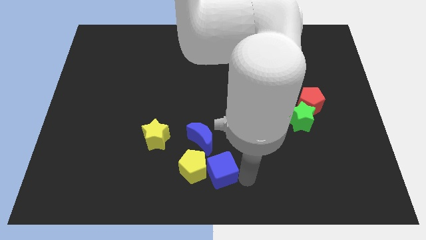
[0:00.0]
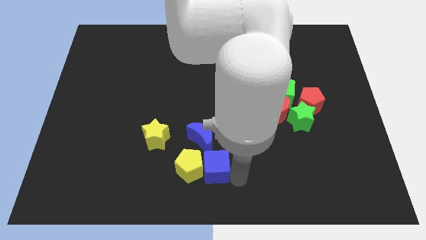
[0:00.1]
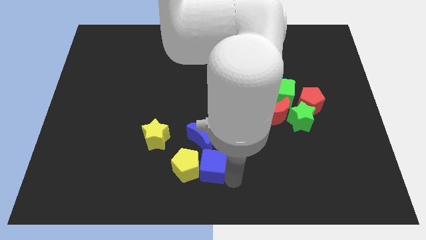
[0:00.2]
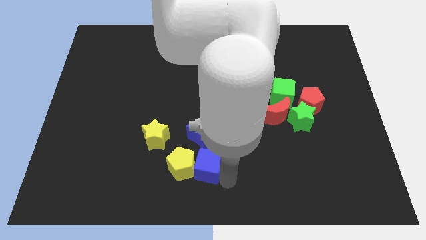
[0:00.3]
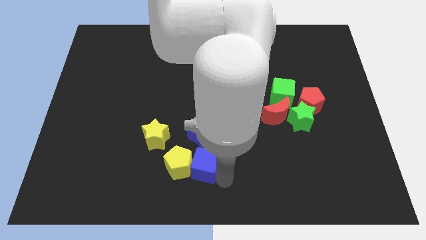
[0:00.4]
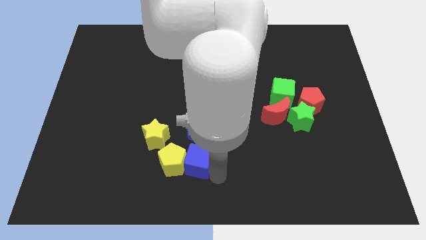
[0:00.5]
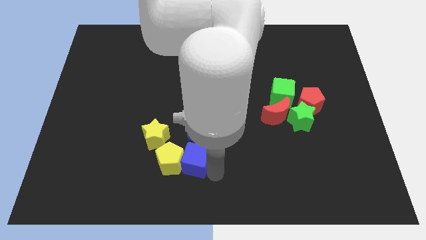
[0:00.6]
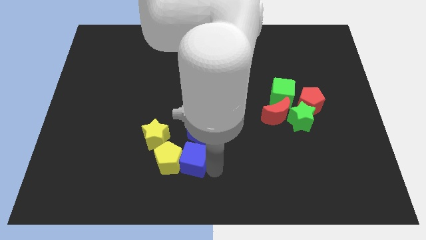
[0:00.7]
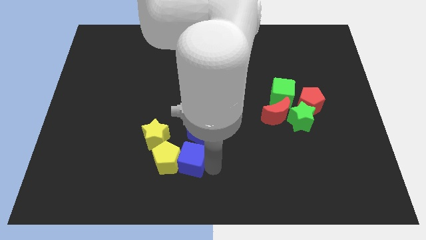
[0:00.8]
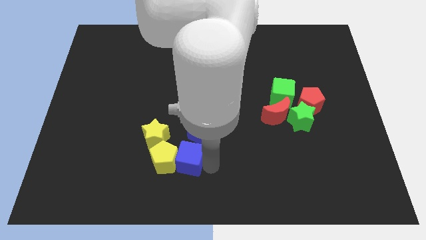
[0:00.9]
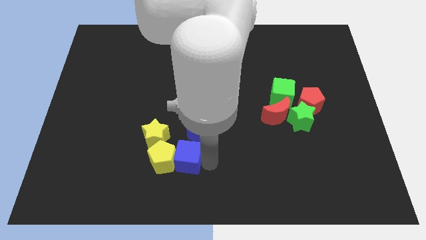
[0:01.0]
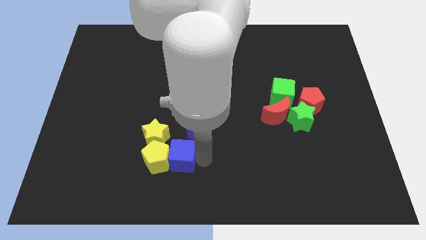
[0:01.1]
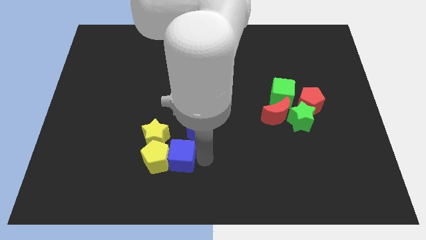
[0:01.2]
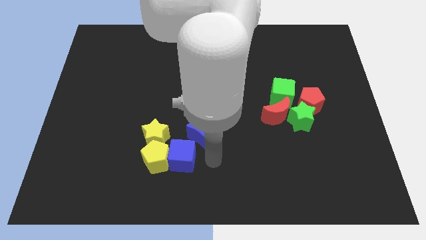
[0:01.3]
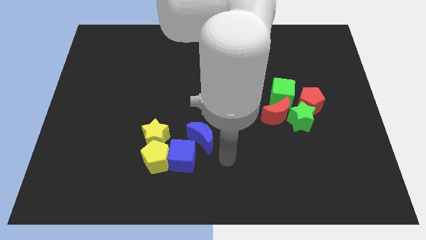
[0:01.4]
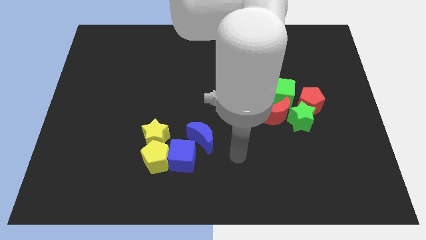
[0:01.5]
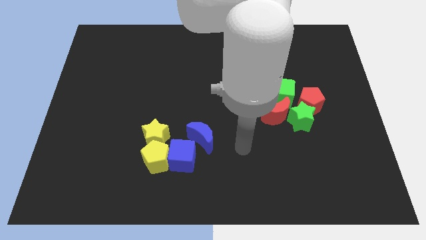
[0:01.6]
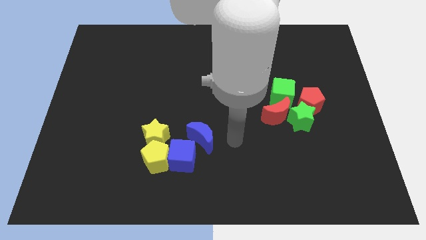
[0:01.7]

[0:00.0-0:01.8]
place the blue cube and the yellow pentagon diagonally bottom left to the blue moon

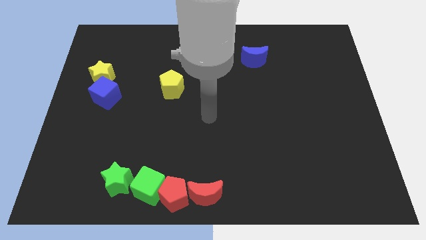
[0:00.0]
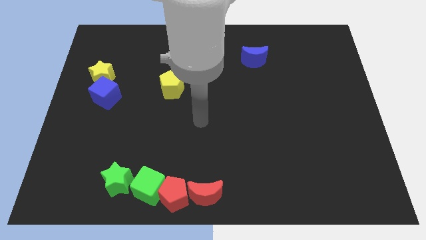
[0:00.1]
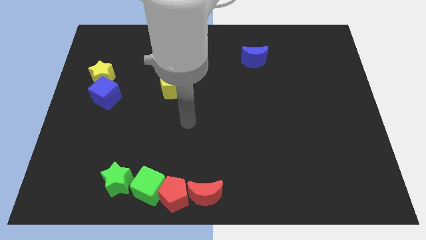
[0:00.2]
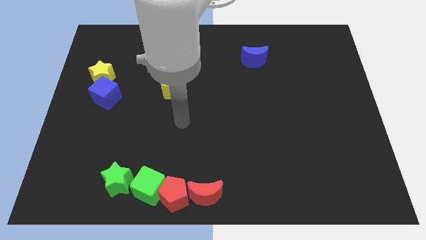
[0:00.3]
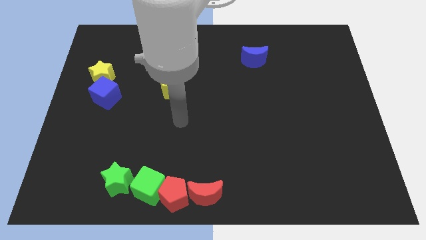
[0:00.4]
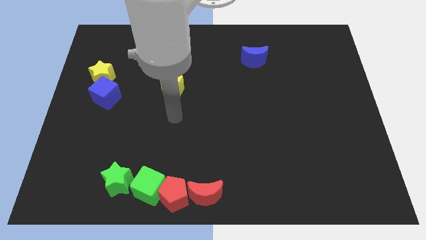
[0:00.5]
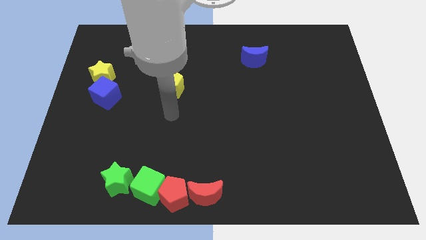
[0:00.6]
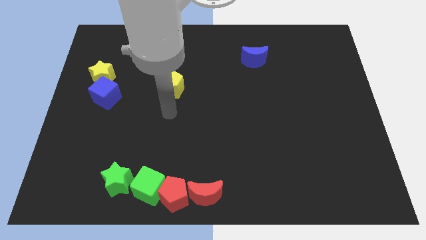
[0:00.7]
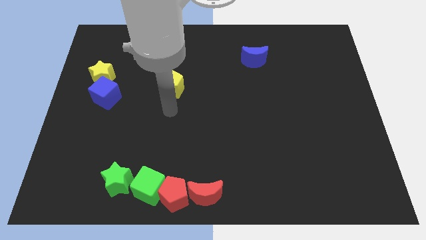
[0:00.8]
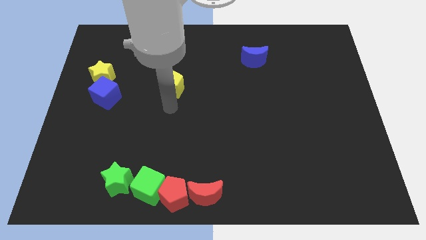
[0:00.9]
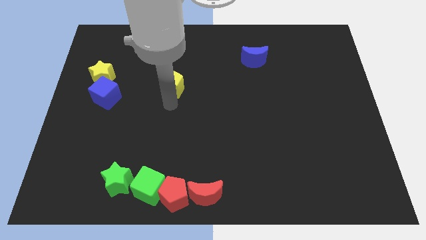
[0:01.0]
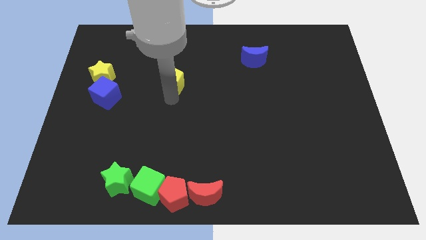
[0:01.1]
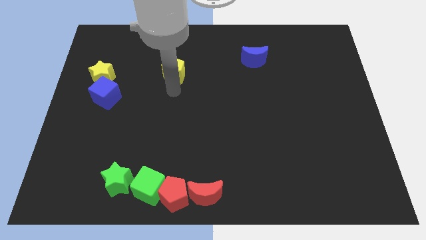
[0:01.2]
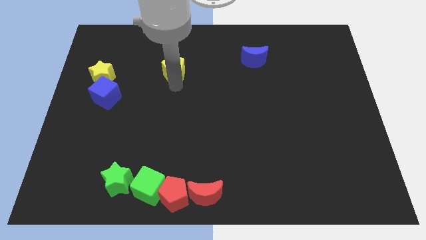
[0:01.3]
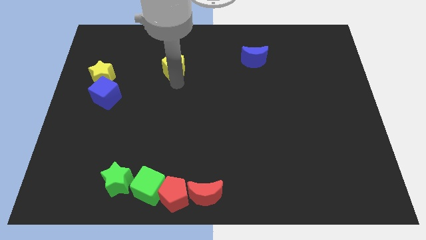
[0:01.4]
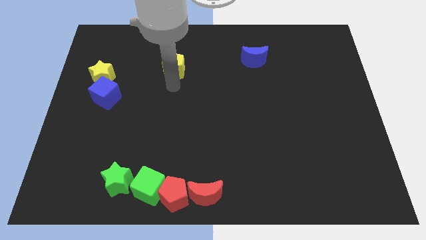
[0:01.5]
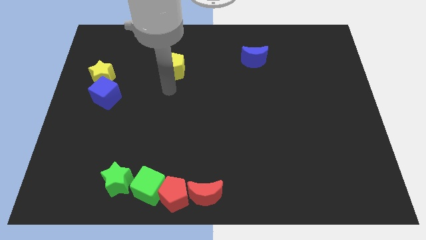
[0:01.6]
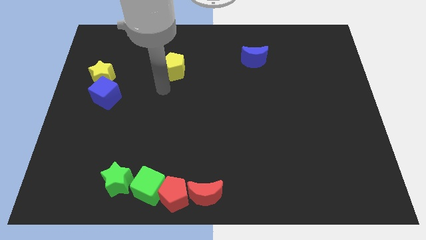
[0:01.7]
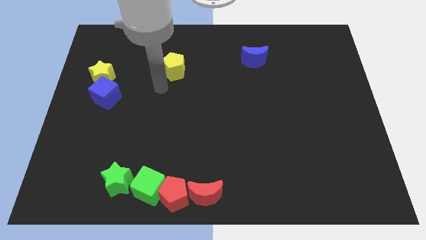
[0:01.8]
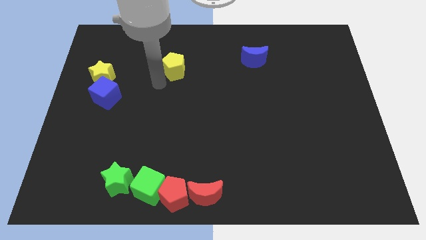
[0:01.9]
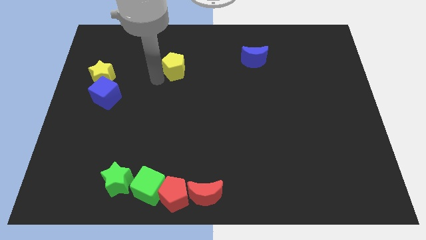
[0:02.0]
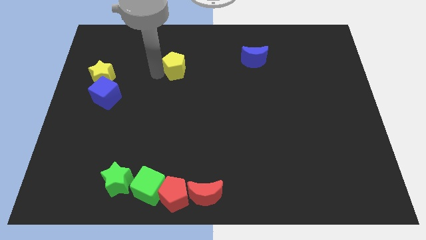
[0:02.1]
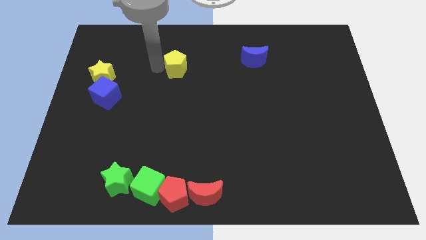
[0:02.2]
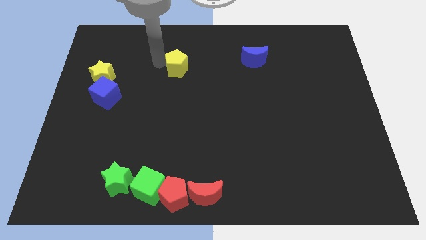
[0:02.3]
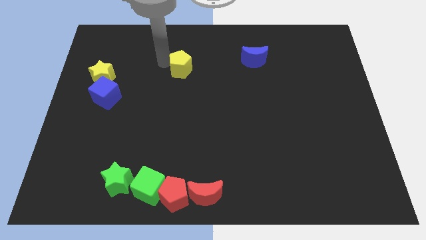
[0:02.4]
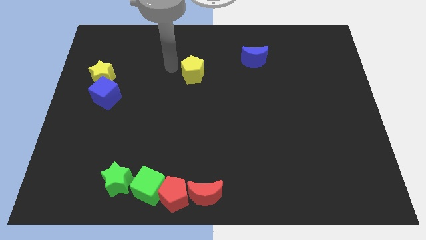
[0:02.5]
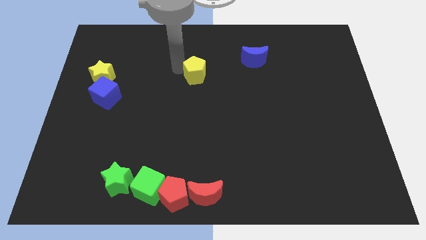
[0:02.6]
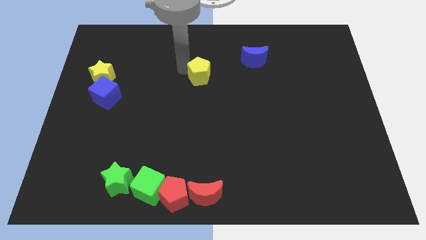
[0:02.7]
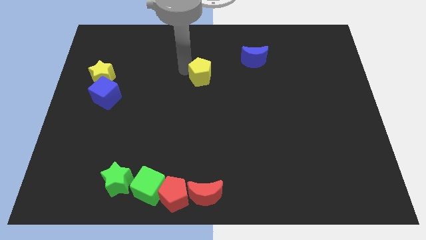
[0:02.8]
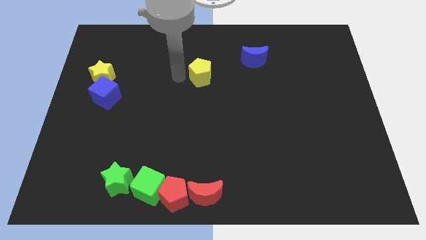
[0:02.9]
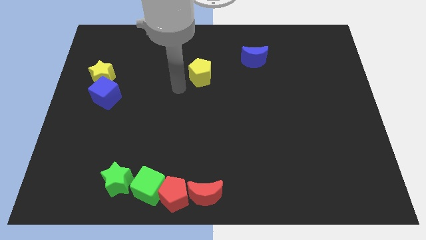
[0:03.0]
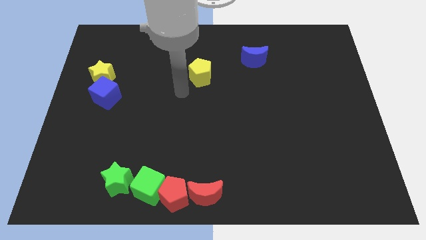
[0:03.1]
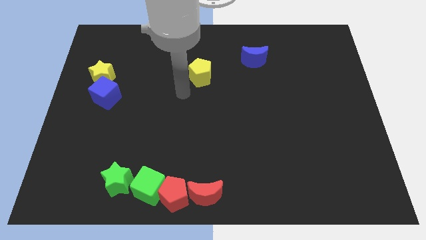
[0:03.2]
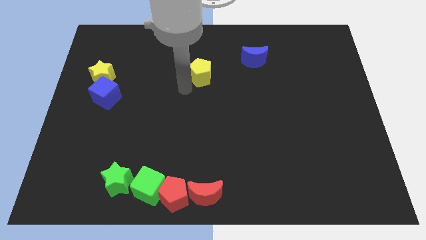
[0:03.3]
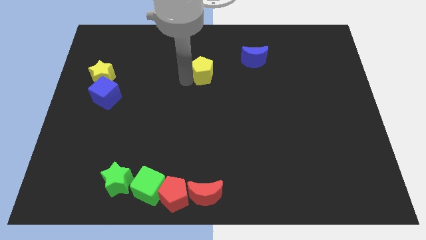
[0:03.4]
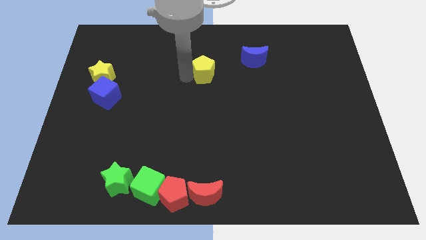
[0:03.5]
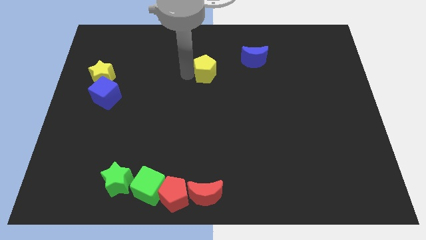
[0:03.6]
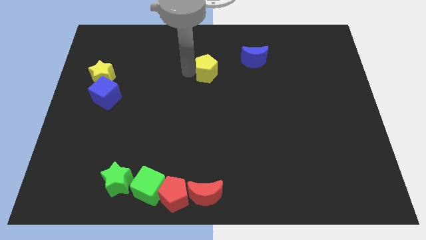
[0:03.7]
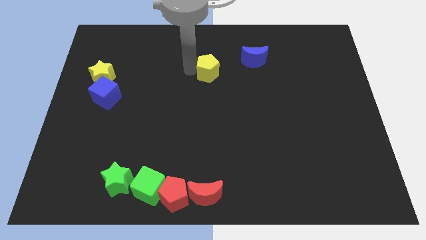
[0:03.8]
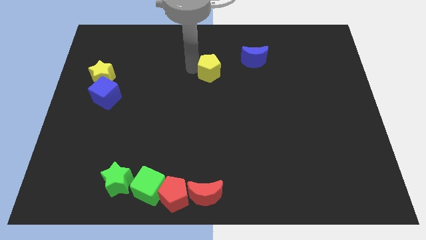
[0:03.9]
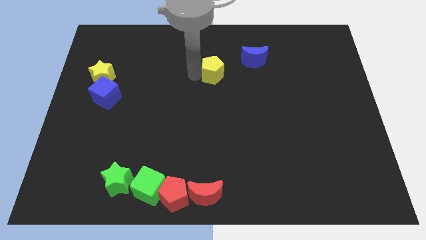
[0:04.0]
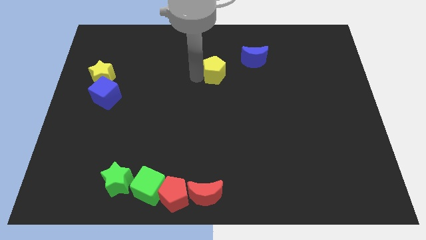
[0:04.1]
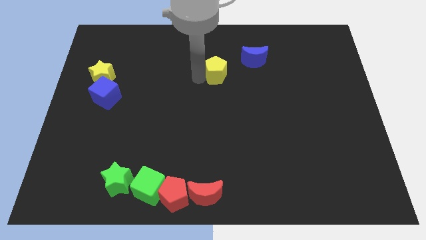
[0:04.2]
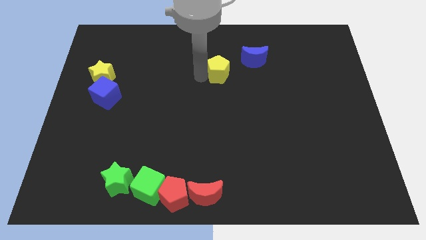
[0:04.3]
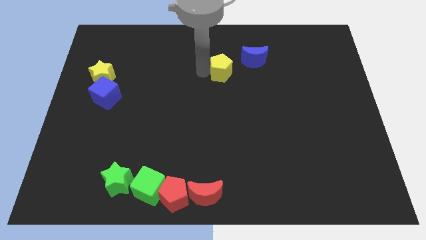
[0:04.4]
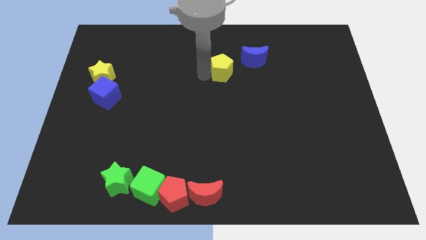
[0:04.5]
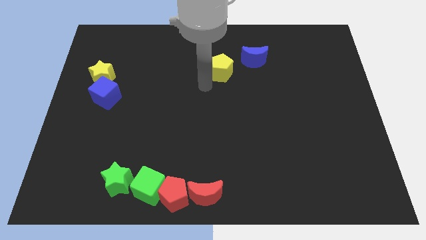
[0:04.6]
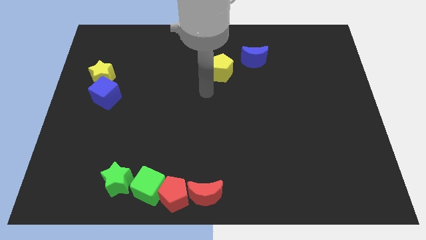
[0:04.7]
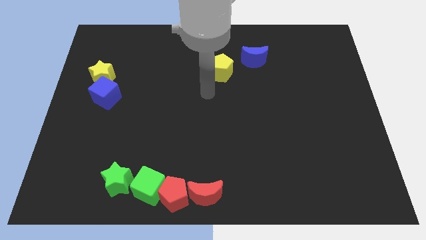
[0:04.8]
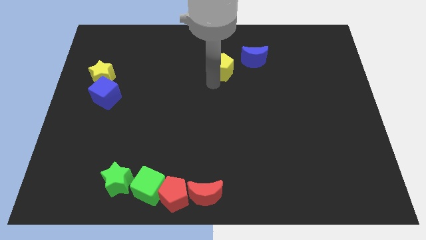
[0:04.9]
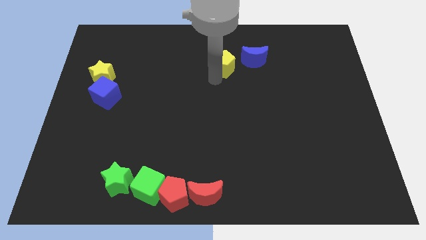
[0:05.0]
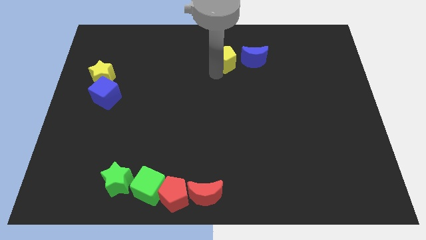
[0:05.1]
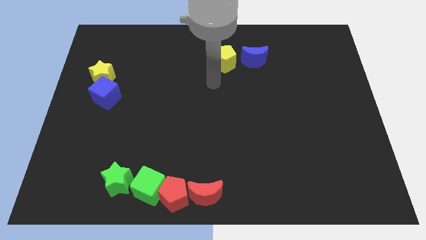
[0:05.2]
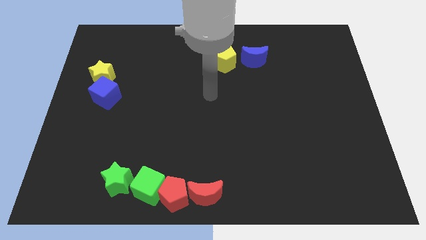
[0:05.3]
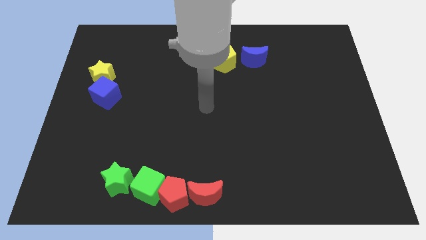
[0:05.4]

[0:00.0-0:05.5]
move the yellow pentagon to the left of the blue crescent

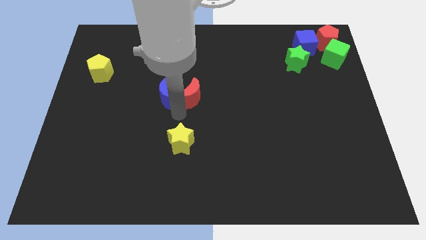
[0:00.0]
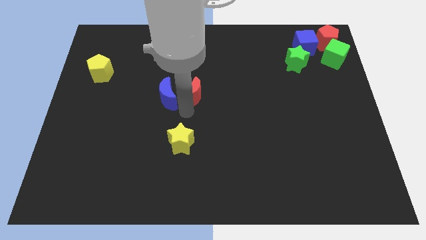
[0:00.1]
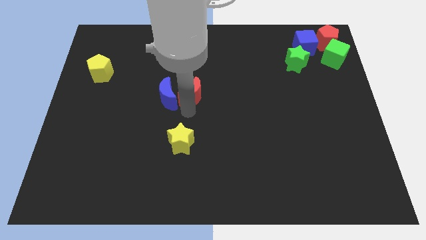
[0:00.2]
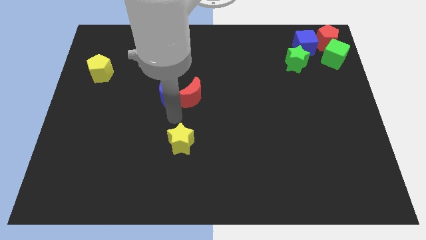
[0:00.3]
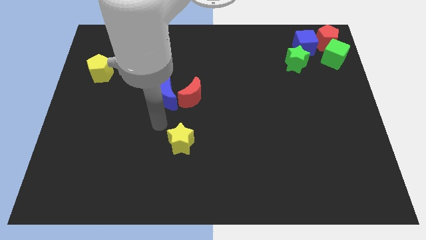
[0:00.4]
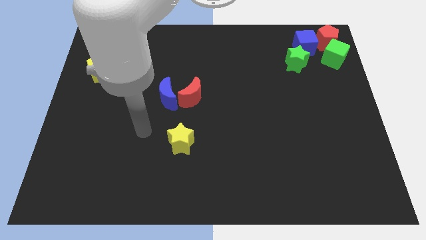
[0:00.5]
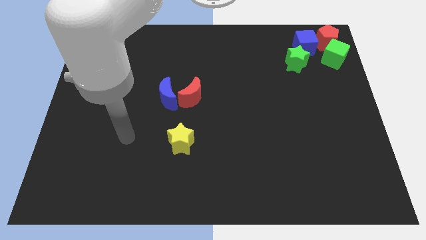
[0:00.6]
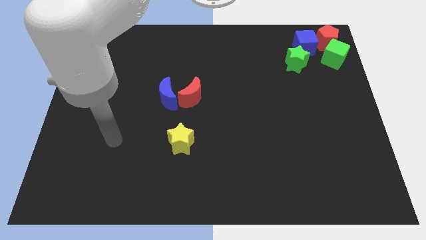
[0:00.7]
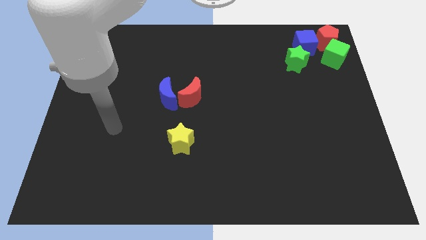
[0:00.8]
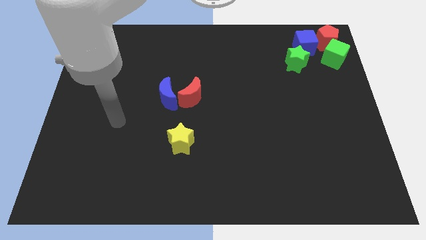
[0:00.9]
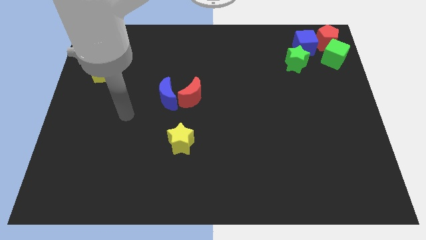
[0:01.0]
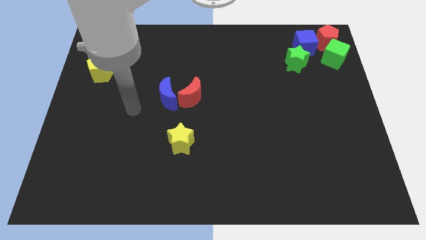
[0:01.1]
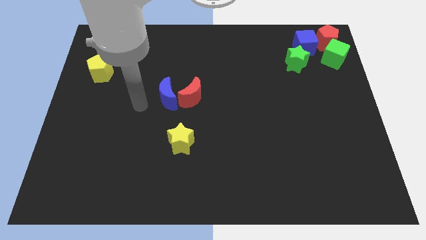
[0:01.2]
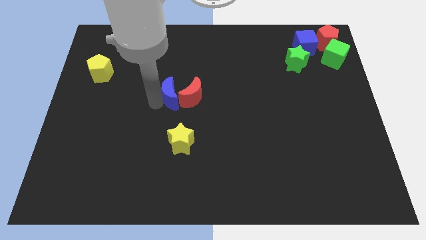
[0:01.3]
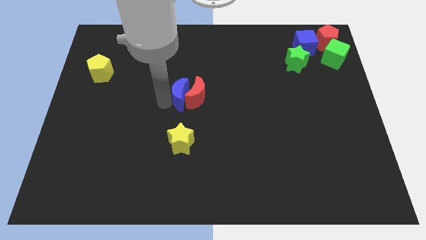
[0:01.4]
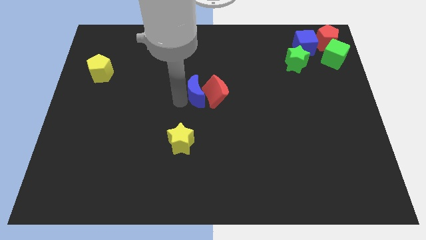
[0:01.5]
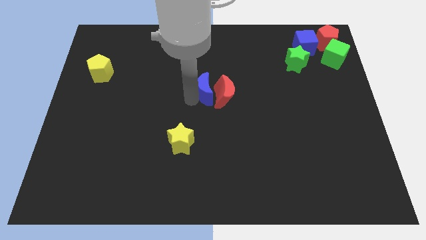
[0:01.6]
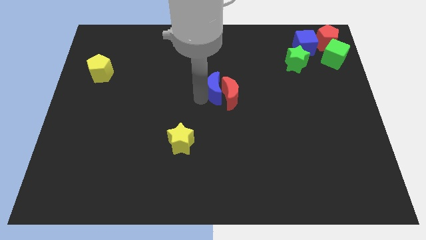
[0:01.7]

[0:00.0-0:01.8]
move blue moon into the red moon
